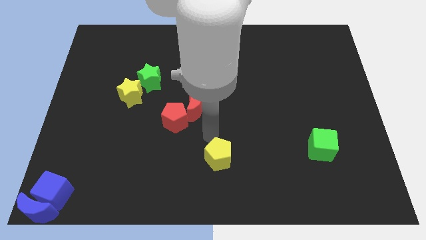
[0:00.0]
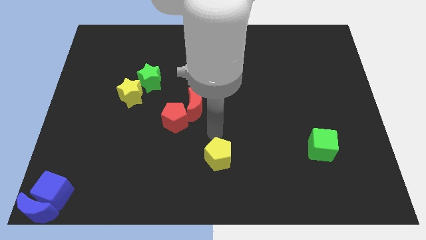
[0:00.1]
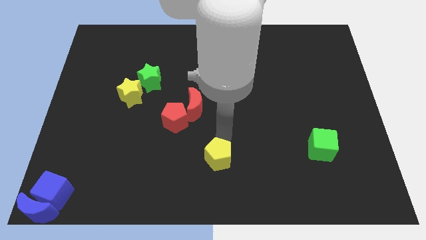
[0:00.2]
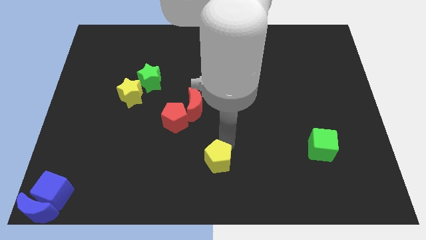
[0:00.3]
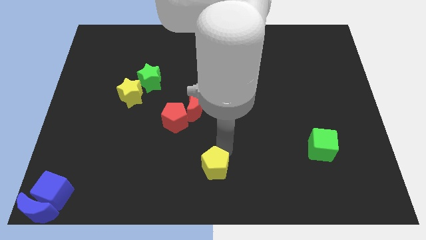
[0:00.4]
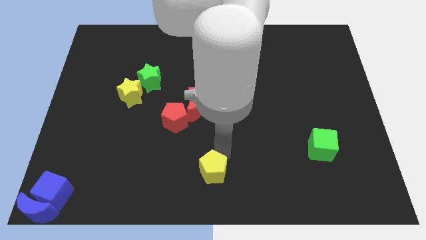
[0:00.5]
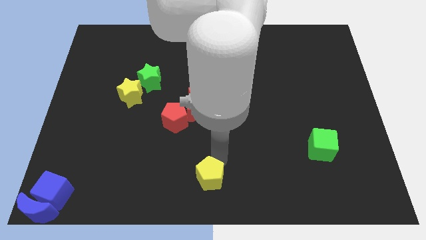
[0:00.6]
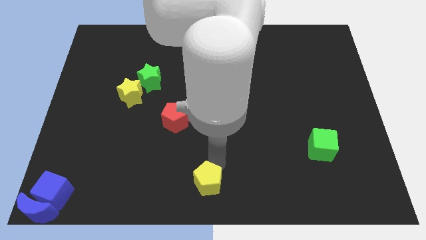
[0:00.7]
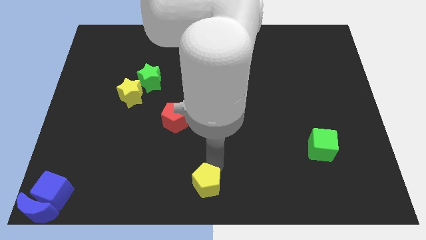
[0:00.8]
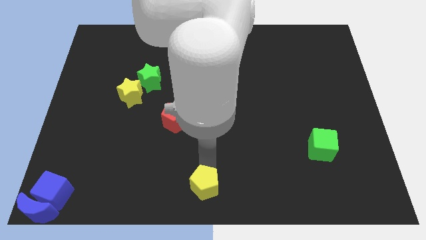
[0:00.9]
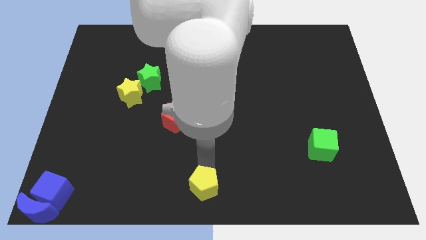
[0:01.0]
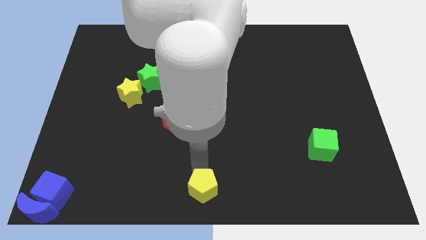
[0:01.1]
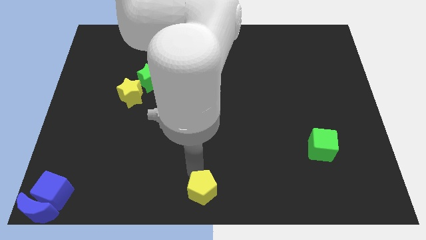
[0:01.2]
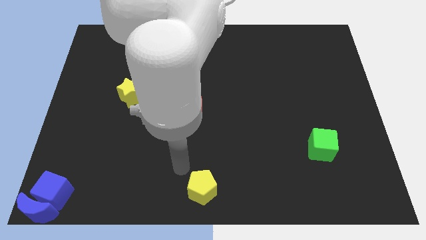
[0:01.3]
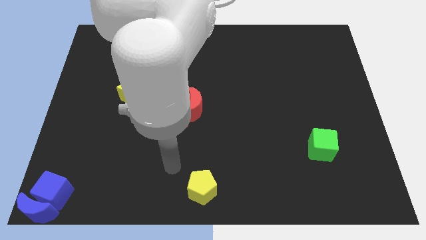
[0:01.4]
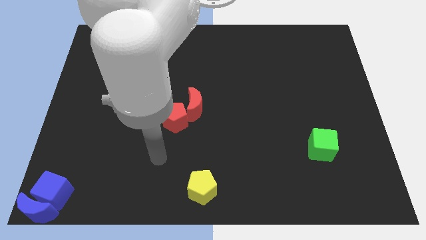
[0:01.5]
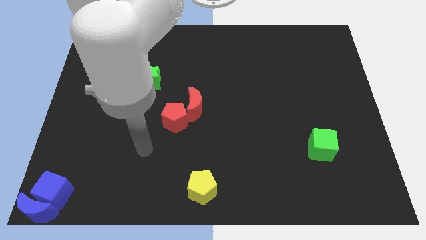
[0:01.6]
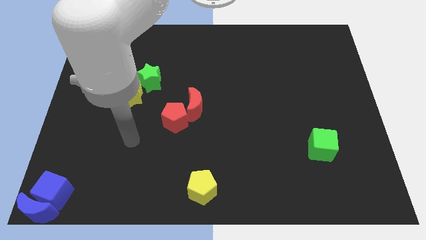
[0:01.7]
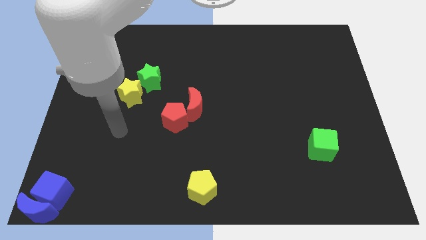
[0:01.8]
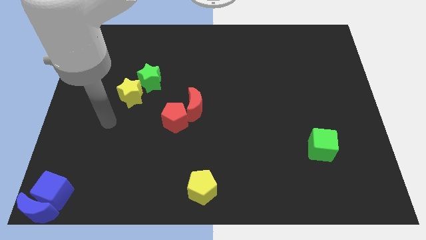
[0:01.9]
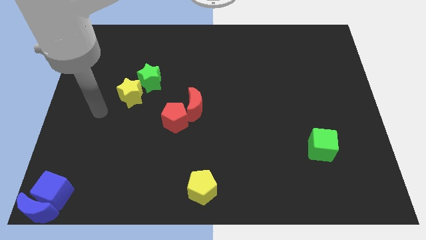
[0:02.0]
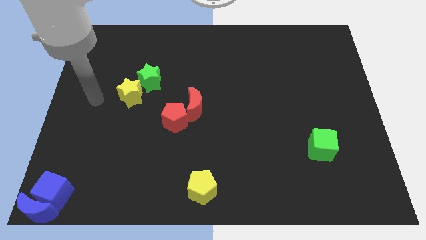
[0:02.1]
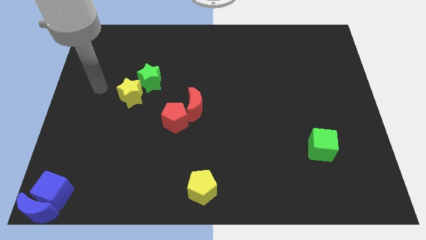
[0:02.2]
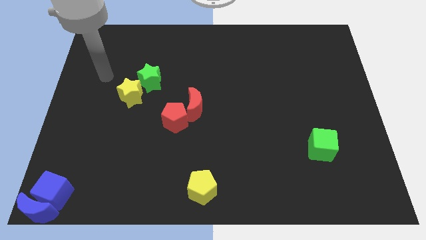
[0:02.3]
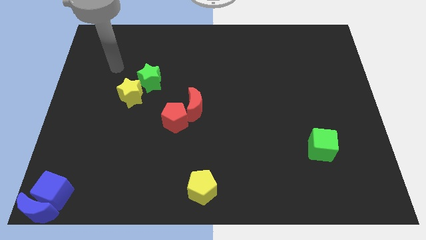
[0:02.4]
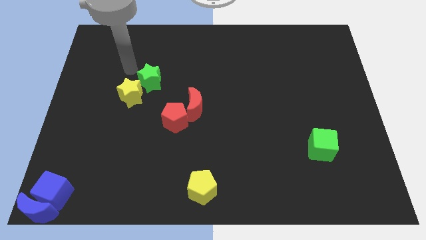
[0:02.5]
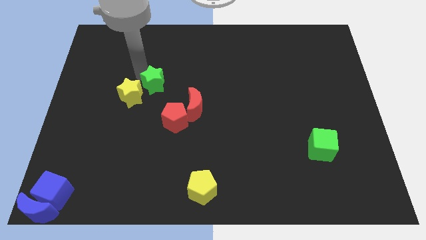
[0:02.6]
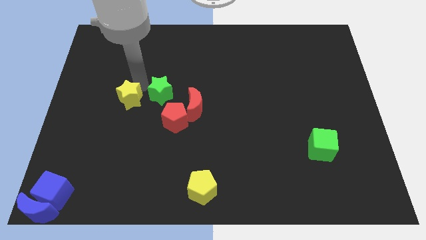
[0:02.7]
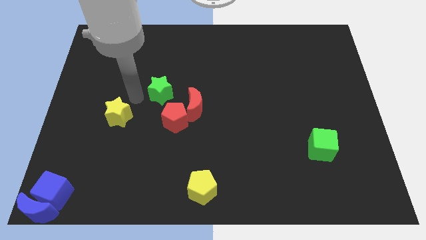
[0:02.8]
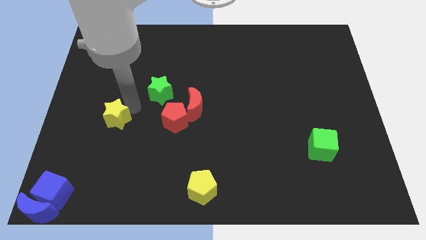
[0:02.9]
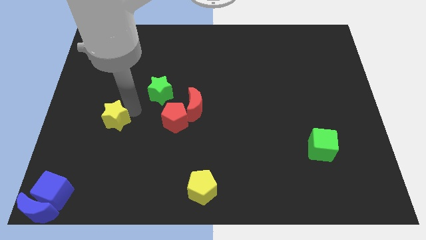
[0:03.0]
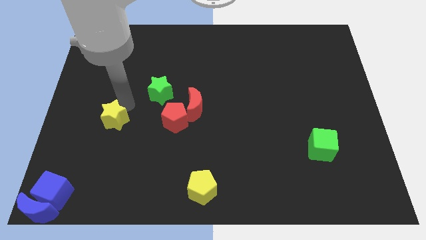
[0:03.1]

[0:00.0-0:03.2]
separate the yellow star and green star

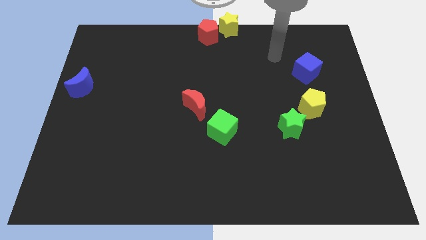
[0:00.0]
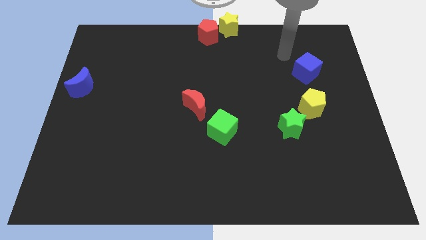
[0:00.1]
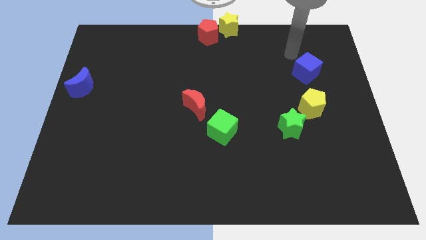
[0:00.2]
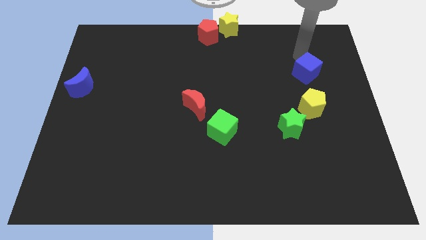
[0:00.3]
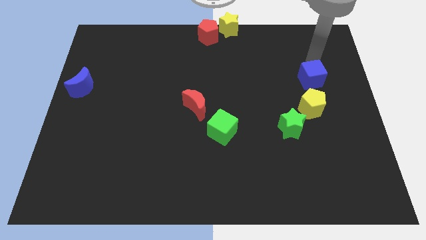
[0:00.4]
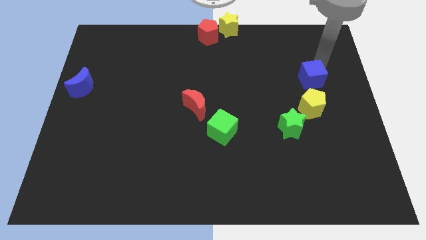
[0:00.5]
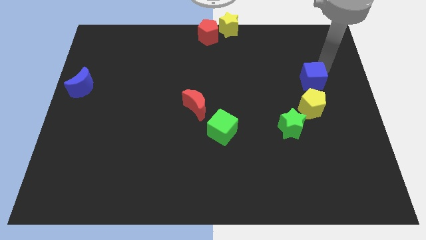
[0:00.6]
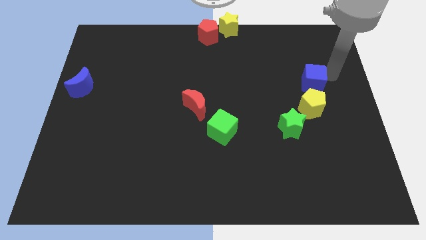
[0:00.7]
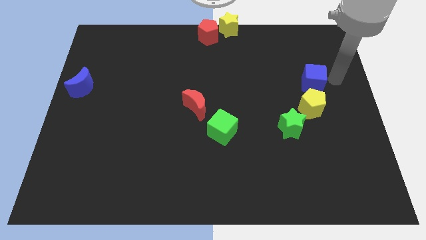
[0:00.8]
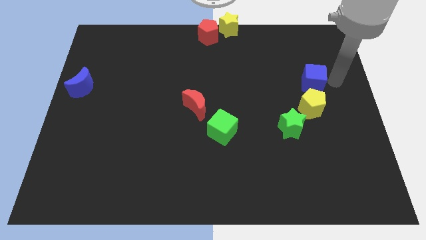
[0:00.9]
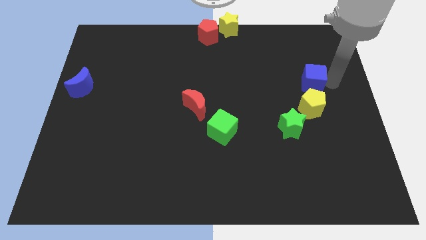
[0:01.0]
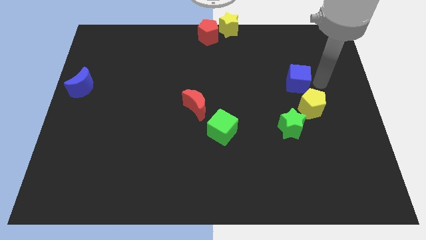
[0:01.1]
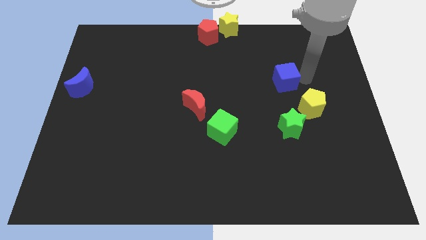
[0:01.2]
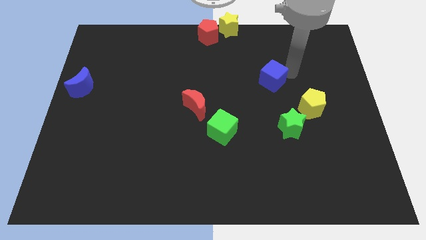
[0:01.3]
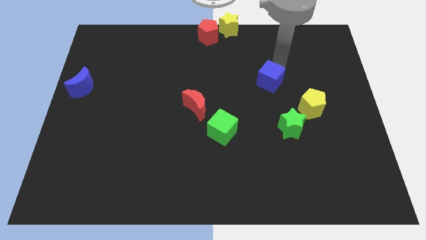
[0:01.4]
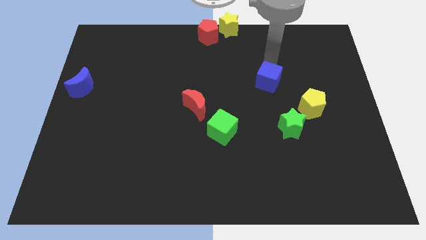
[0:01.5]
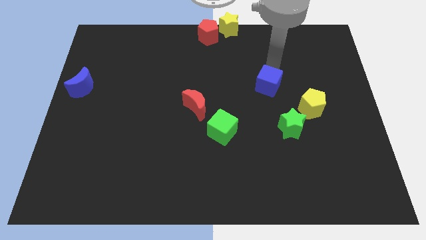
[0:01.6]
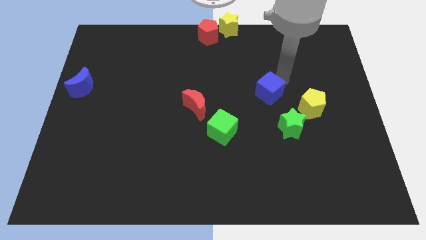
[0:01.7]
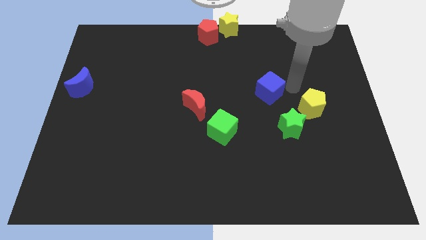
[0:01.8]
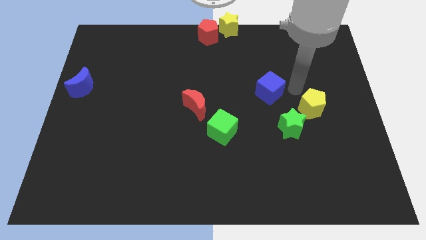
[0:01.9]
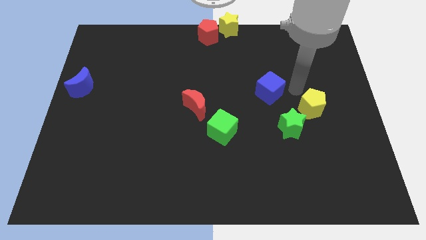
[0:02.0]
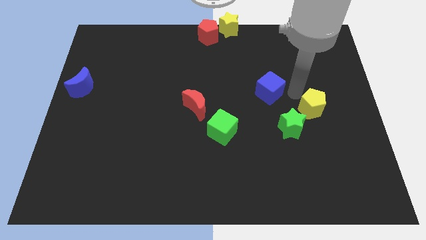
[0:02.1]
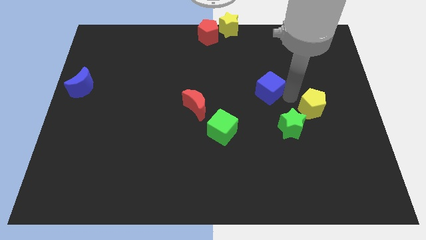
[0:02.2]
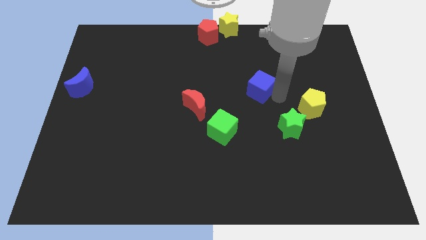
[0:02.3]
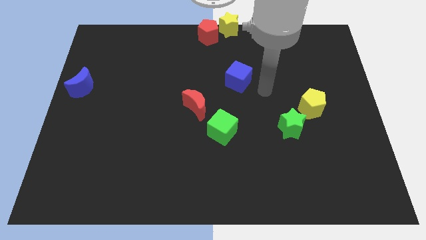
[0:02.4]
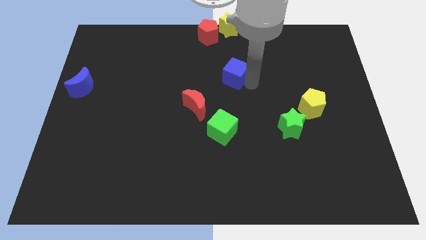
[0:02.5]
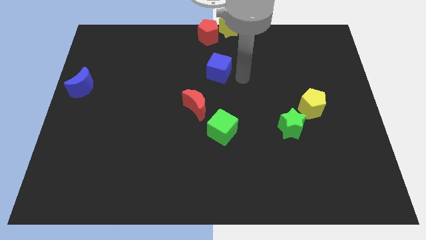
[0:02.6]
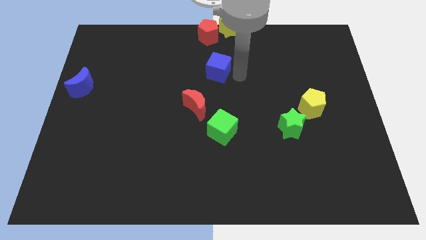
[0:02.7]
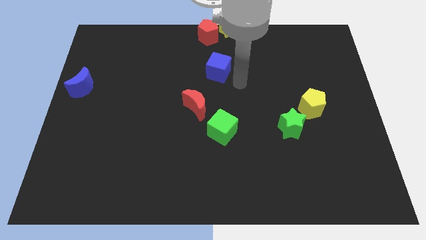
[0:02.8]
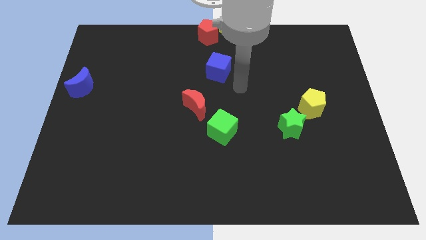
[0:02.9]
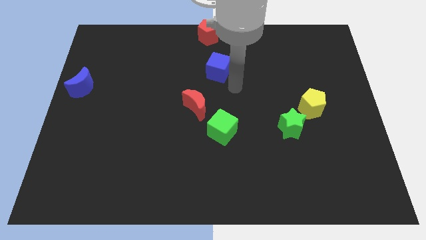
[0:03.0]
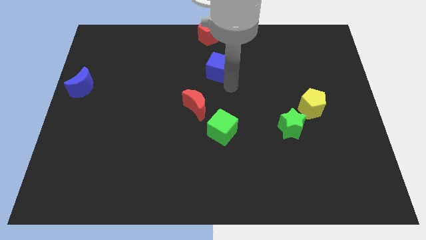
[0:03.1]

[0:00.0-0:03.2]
place blue cube vertical to green cube

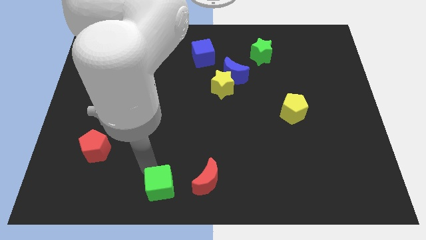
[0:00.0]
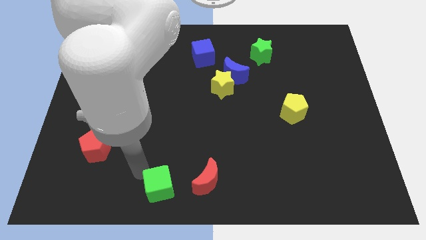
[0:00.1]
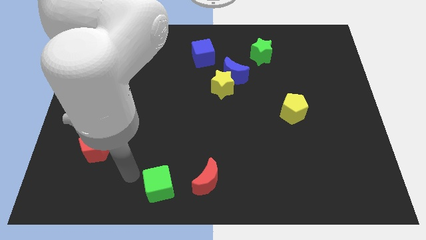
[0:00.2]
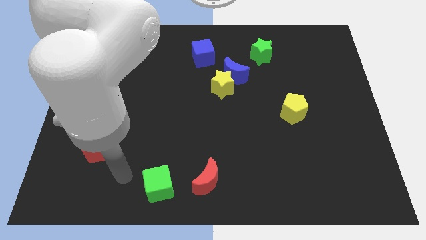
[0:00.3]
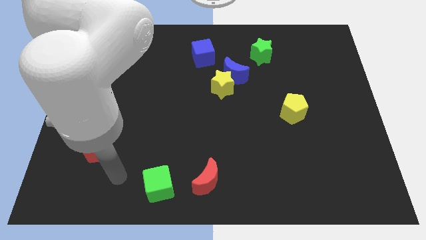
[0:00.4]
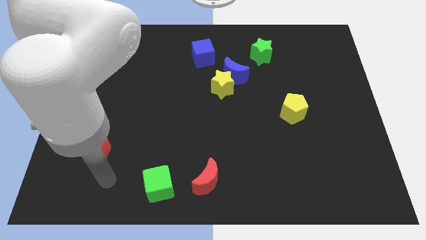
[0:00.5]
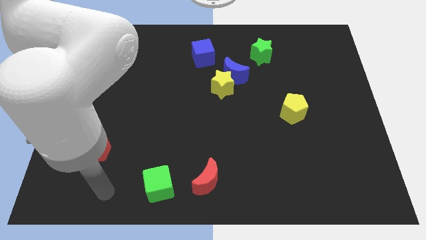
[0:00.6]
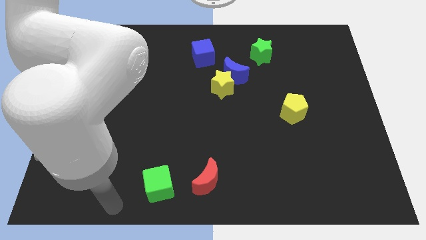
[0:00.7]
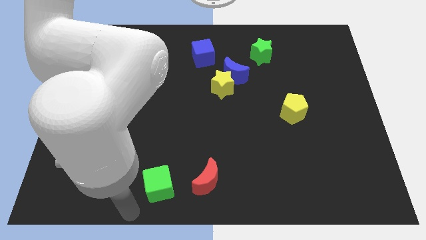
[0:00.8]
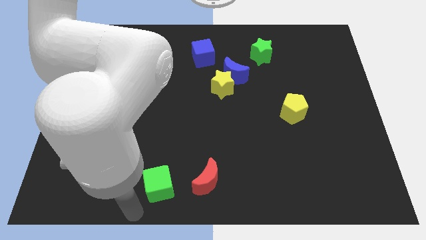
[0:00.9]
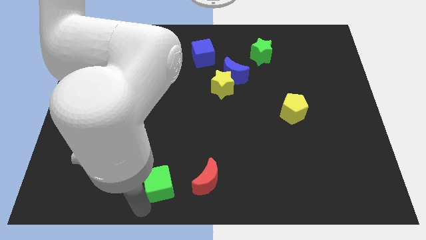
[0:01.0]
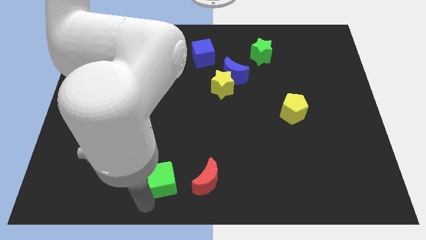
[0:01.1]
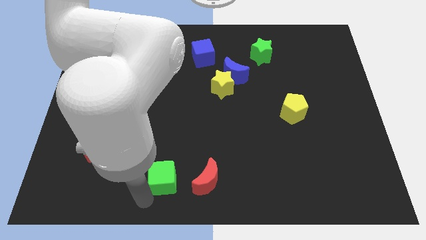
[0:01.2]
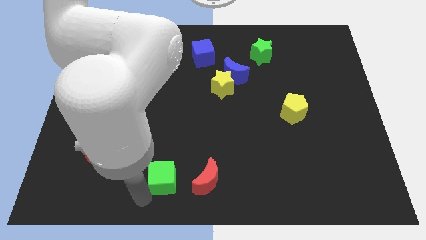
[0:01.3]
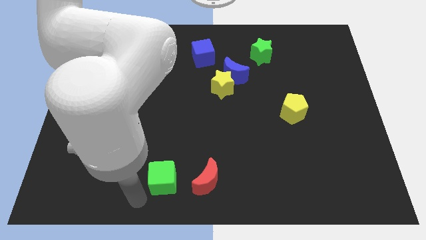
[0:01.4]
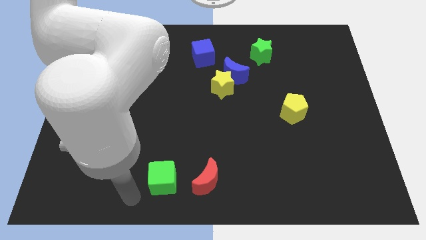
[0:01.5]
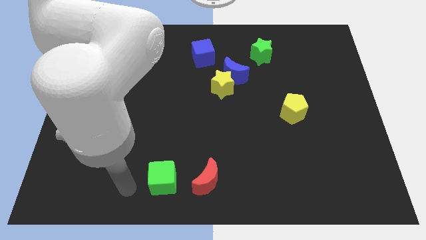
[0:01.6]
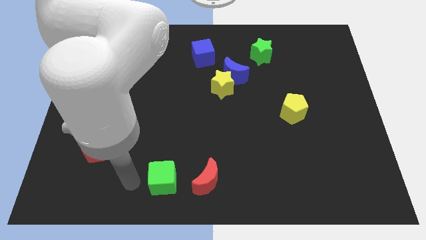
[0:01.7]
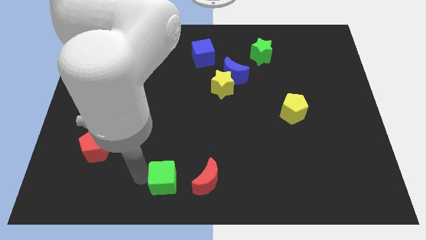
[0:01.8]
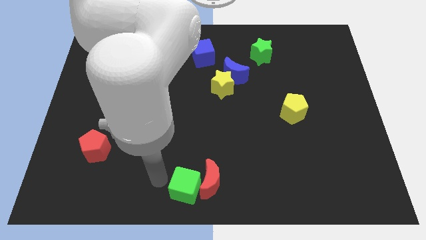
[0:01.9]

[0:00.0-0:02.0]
move the arm towards the left side of the green cube

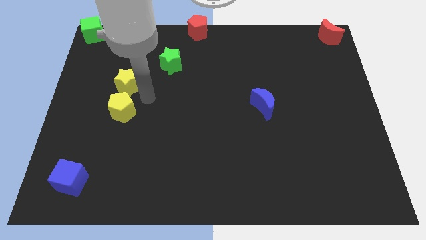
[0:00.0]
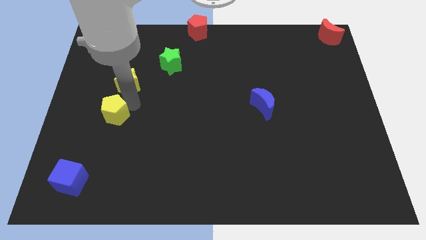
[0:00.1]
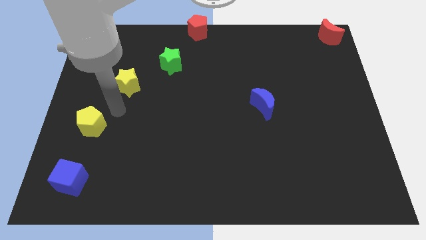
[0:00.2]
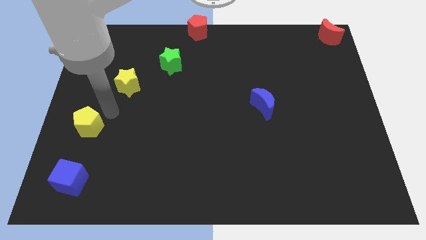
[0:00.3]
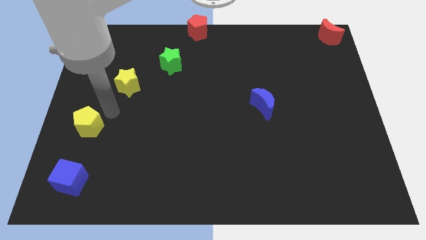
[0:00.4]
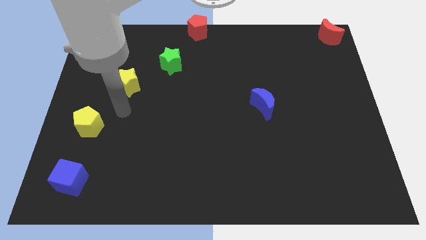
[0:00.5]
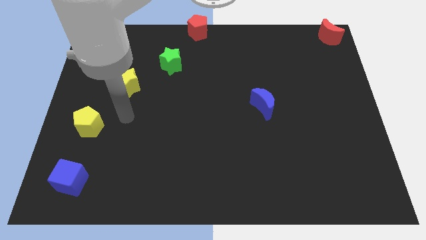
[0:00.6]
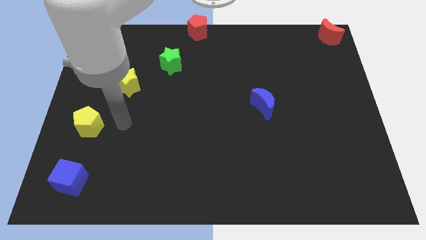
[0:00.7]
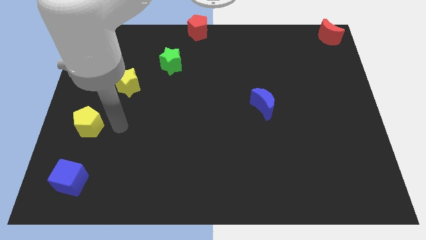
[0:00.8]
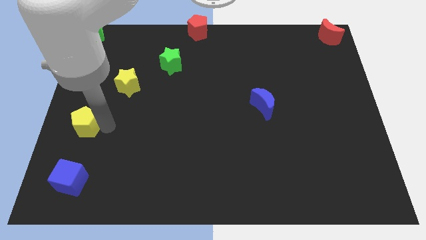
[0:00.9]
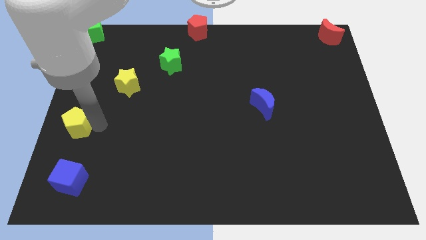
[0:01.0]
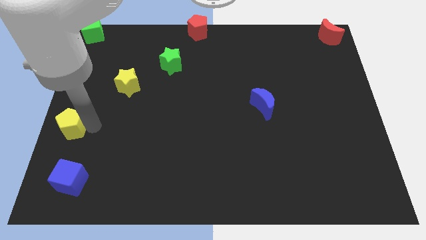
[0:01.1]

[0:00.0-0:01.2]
move the yellow pentagon above the blue cube
